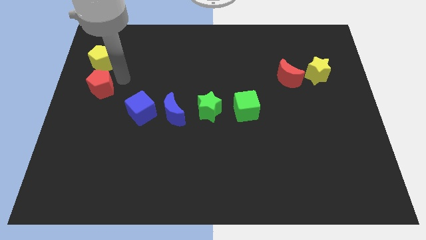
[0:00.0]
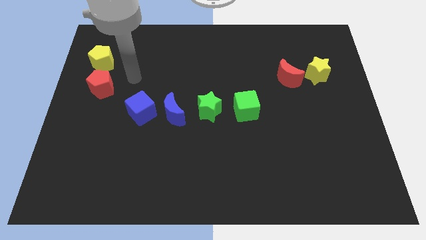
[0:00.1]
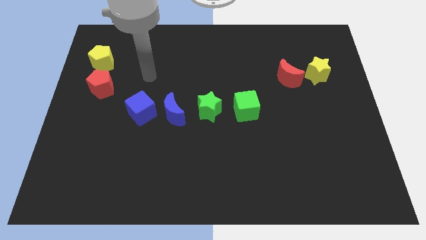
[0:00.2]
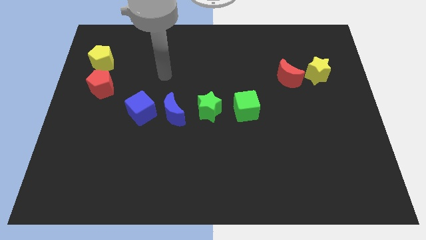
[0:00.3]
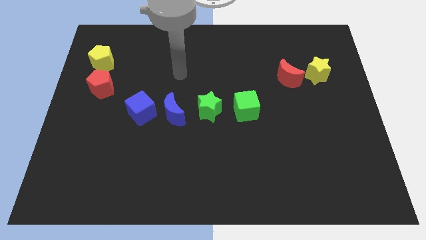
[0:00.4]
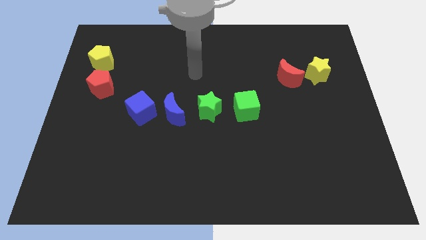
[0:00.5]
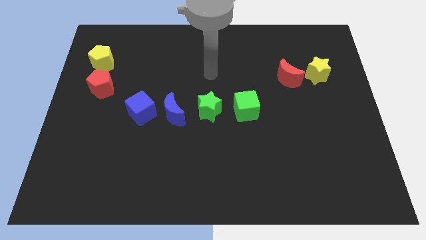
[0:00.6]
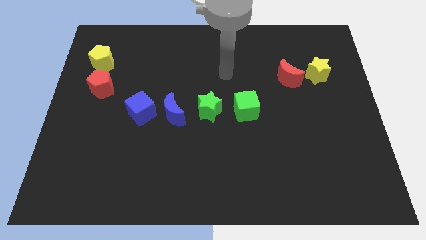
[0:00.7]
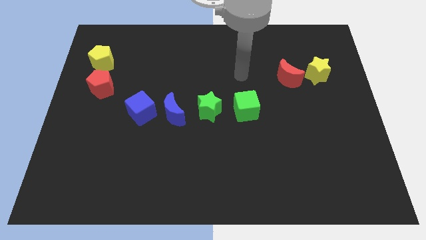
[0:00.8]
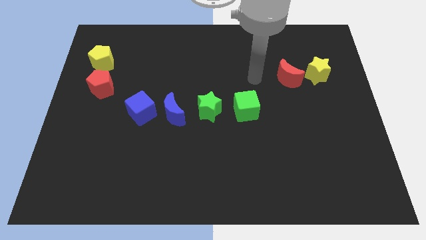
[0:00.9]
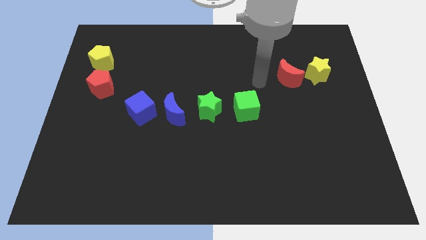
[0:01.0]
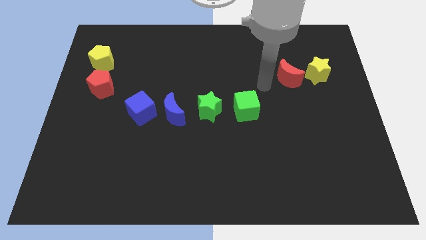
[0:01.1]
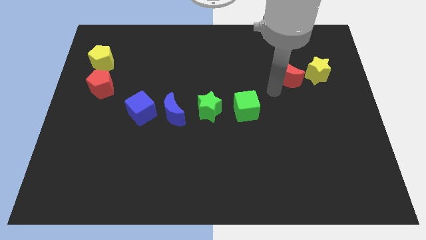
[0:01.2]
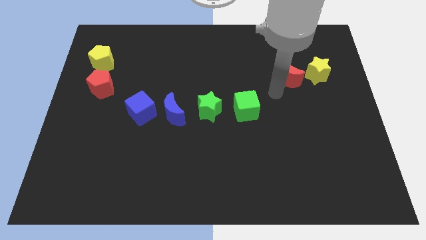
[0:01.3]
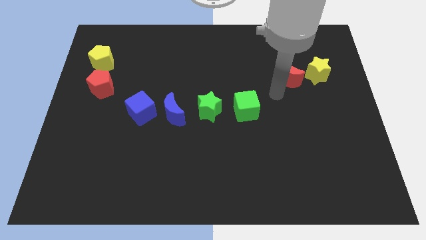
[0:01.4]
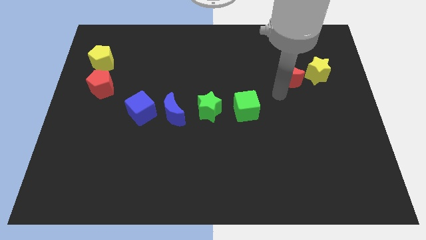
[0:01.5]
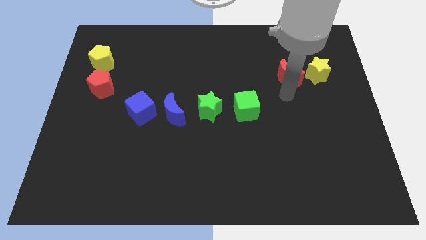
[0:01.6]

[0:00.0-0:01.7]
move your arm away from red pentagon

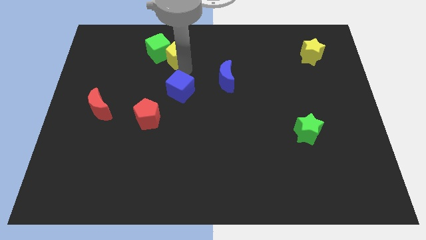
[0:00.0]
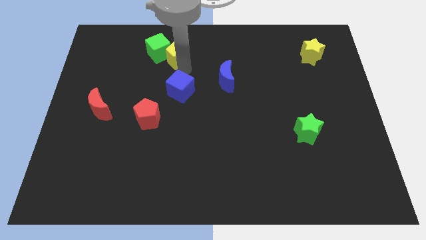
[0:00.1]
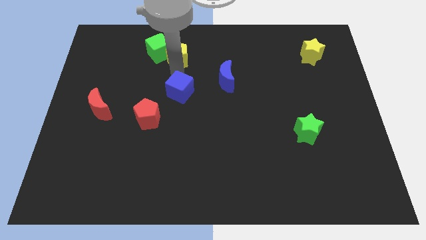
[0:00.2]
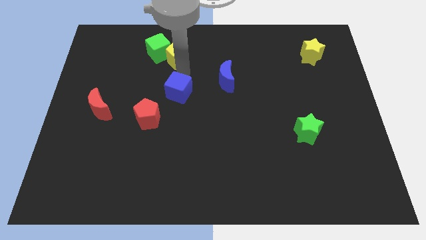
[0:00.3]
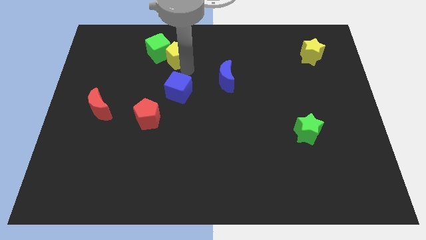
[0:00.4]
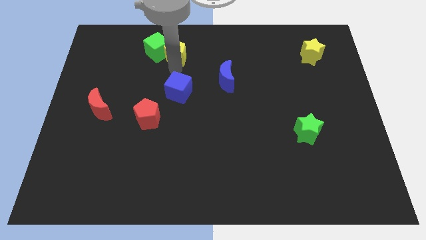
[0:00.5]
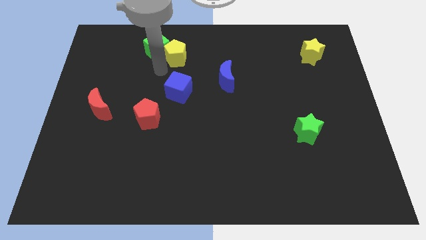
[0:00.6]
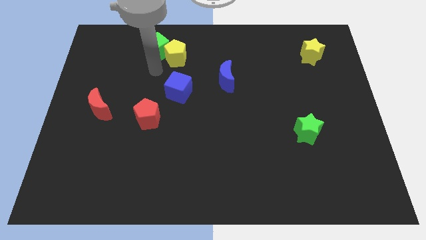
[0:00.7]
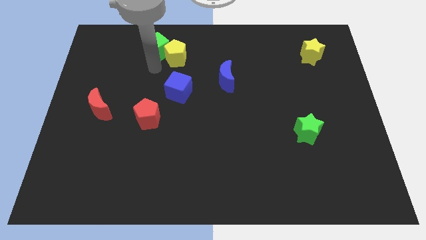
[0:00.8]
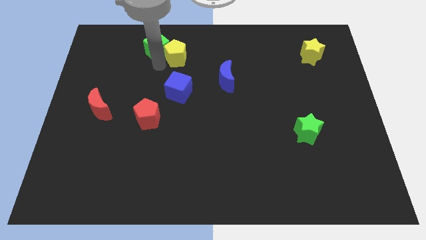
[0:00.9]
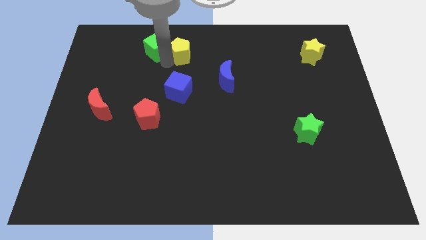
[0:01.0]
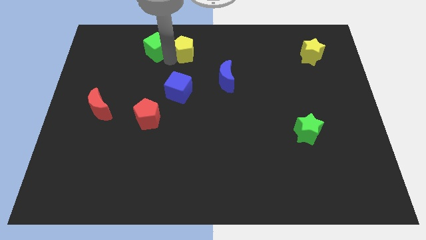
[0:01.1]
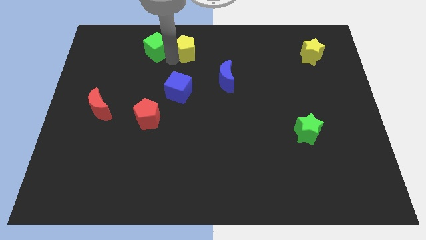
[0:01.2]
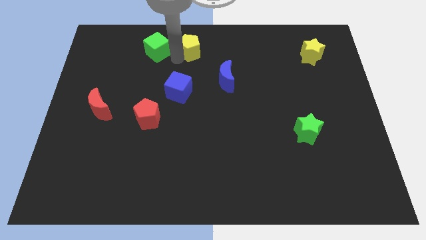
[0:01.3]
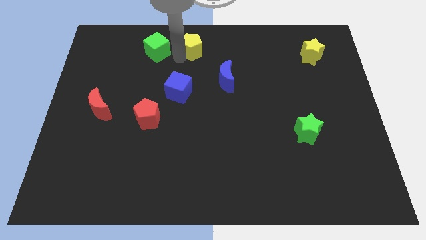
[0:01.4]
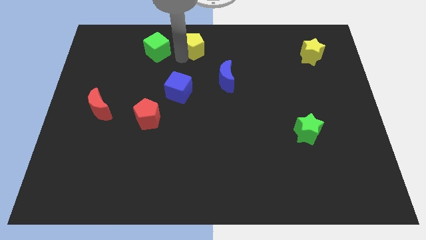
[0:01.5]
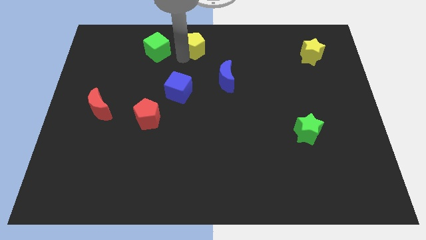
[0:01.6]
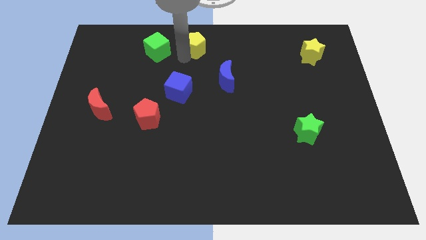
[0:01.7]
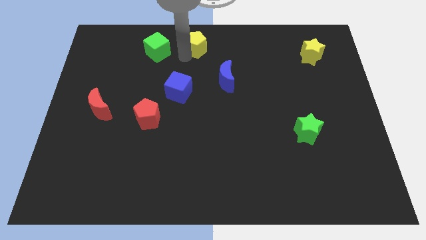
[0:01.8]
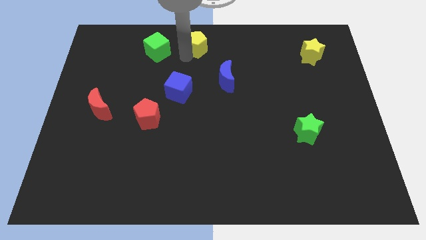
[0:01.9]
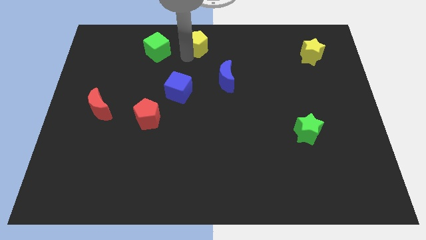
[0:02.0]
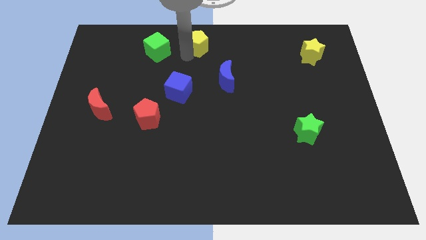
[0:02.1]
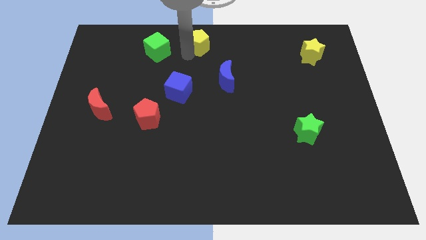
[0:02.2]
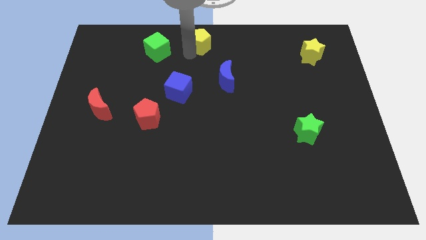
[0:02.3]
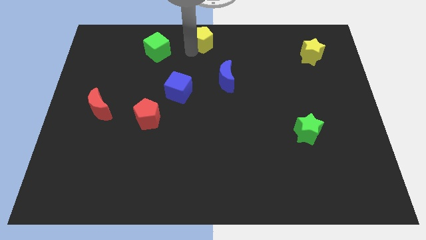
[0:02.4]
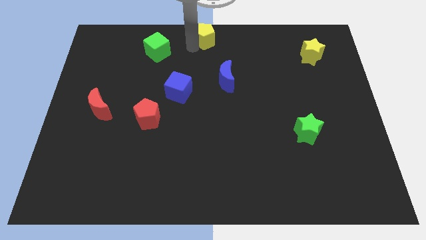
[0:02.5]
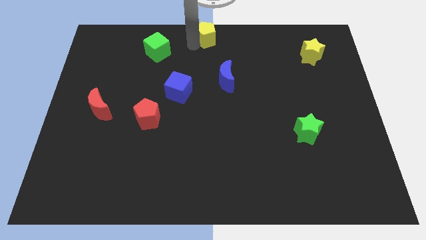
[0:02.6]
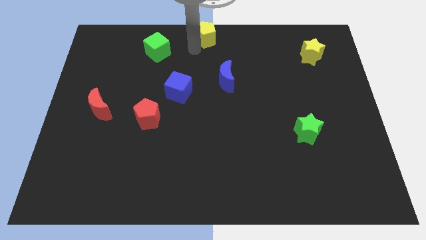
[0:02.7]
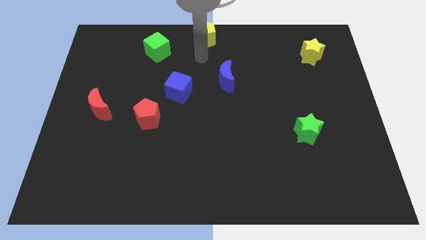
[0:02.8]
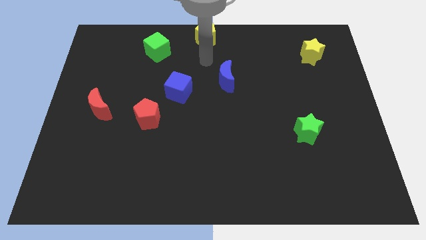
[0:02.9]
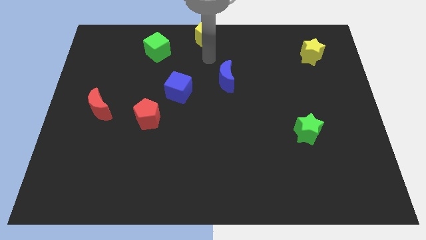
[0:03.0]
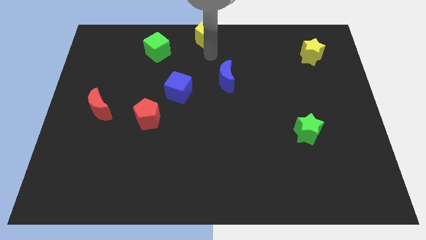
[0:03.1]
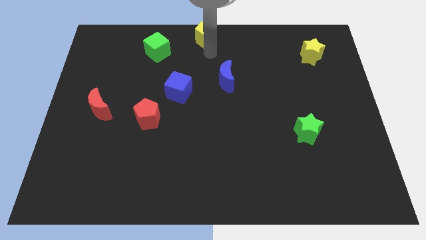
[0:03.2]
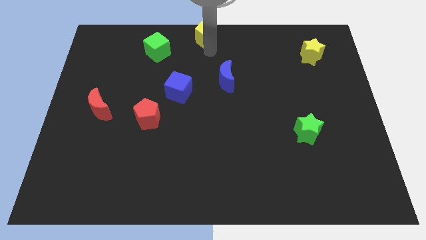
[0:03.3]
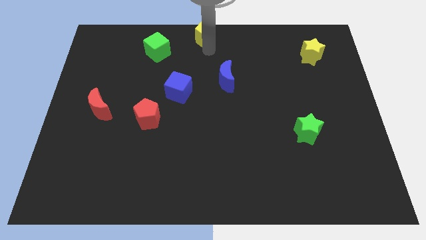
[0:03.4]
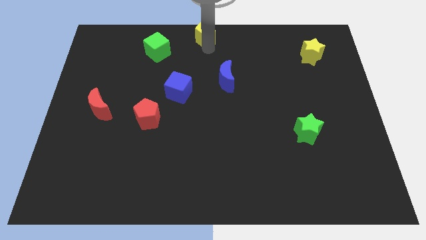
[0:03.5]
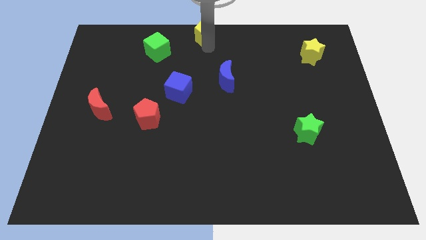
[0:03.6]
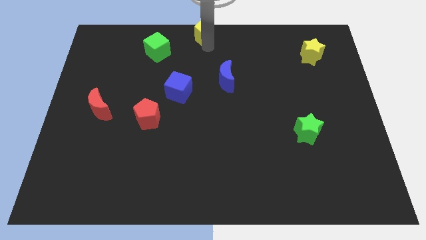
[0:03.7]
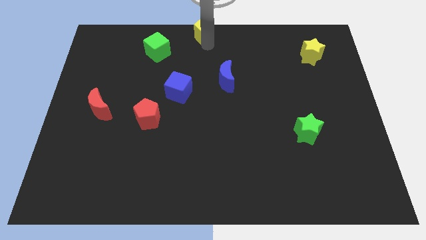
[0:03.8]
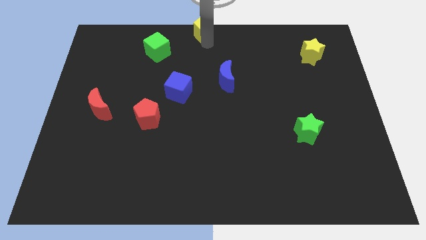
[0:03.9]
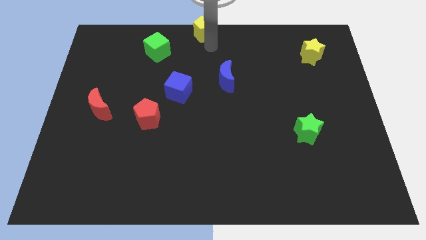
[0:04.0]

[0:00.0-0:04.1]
separate yellow pentagon from green cube

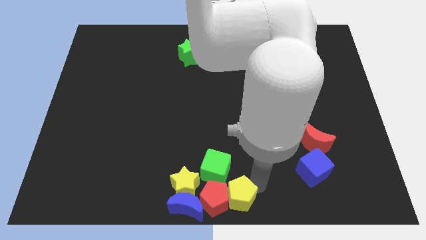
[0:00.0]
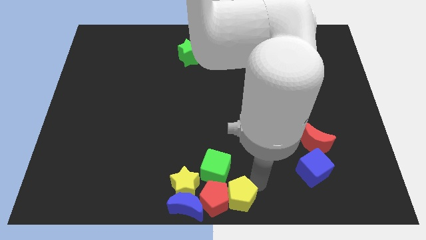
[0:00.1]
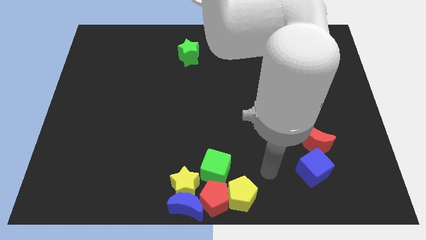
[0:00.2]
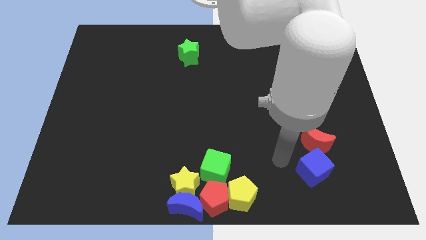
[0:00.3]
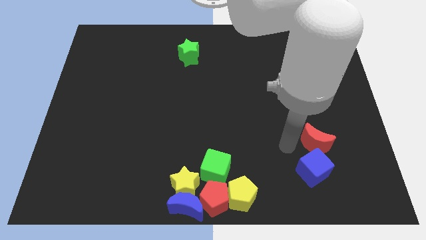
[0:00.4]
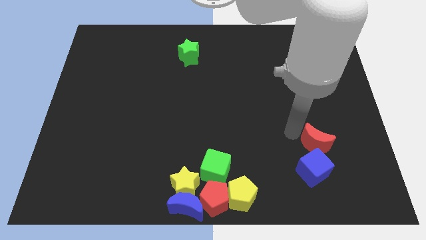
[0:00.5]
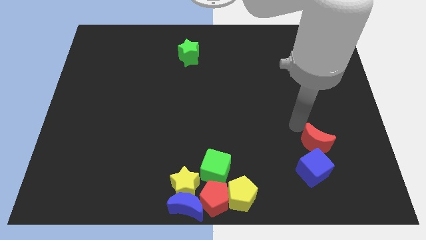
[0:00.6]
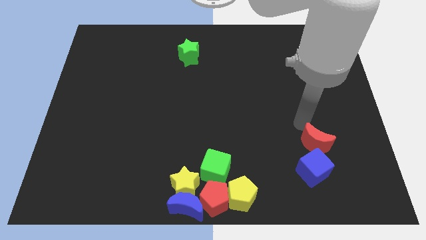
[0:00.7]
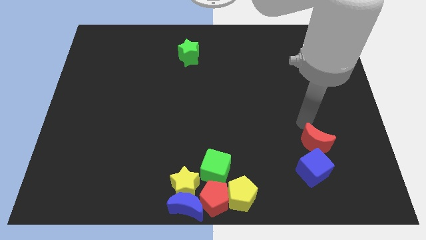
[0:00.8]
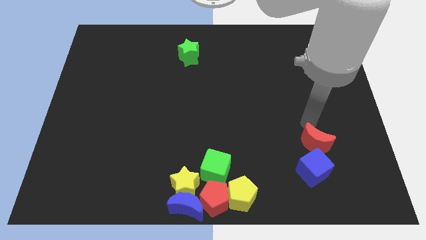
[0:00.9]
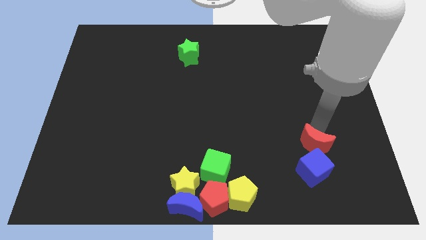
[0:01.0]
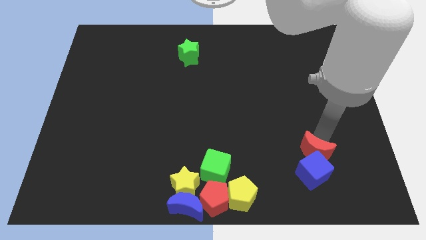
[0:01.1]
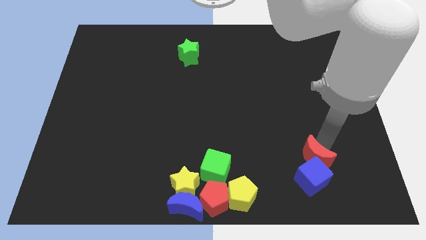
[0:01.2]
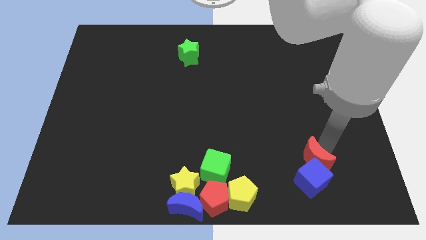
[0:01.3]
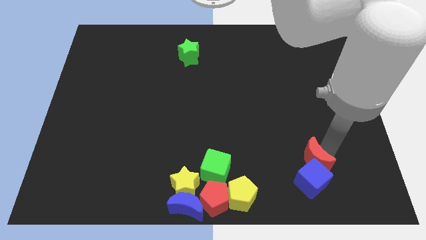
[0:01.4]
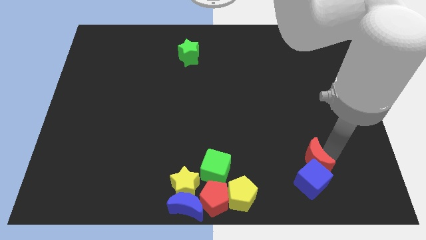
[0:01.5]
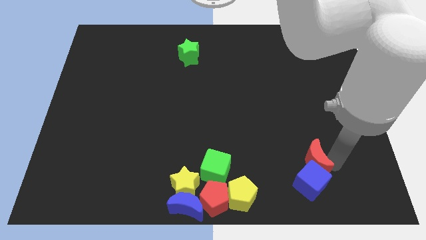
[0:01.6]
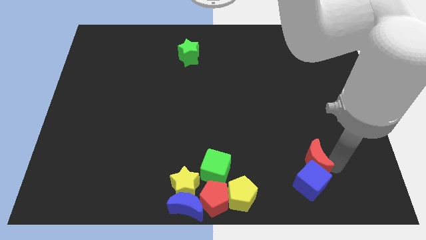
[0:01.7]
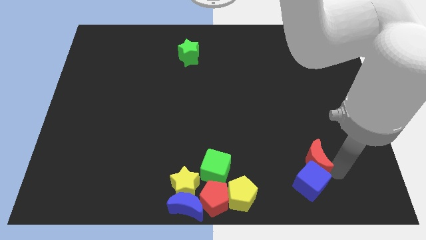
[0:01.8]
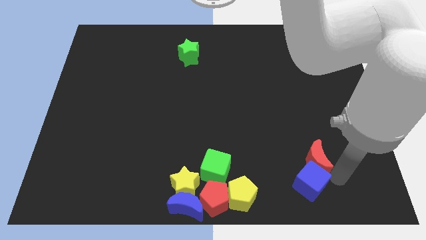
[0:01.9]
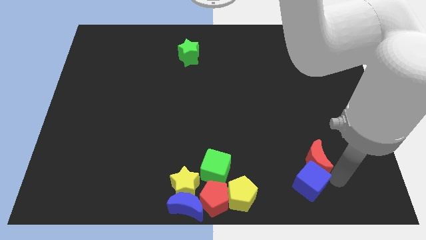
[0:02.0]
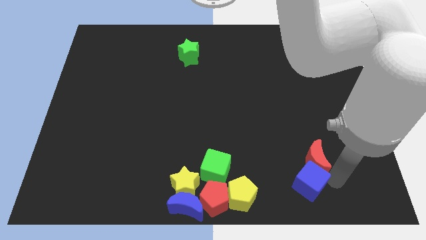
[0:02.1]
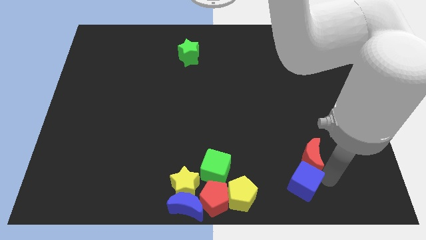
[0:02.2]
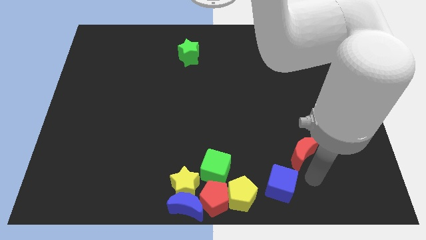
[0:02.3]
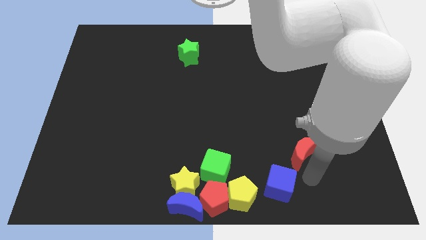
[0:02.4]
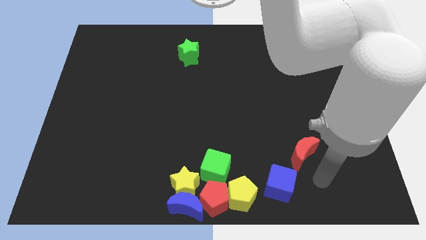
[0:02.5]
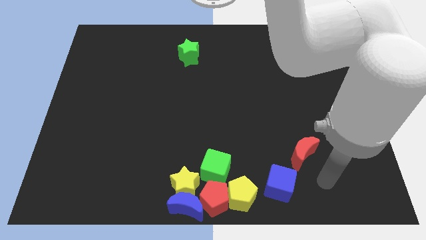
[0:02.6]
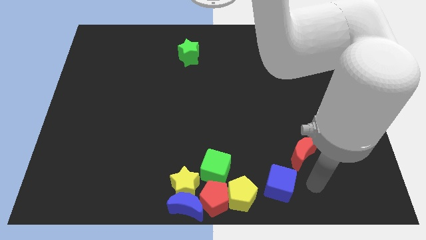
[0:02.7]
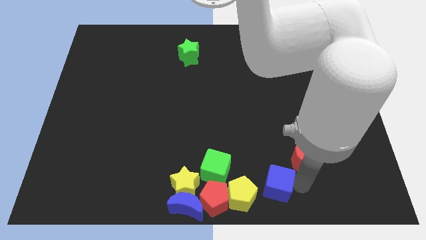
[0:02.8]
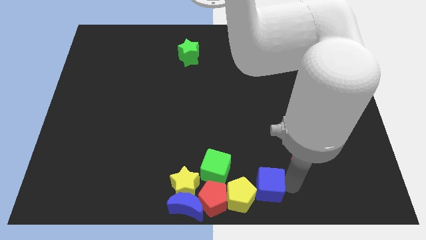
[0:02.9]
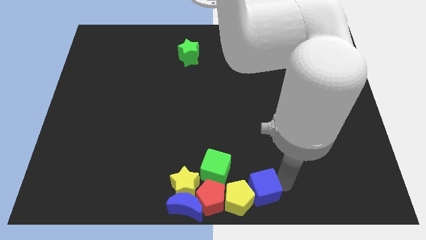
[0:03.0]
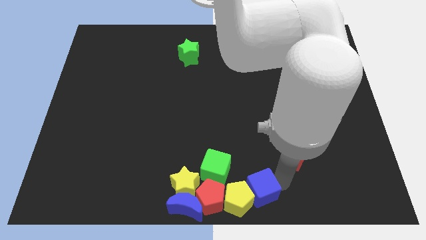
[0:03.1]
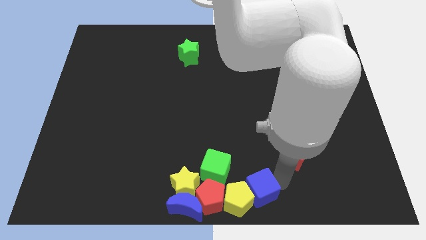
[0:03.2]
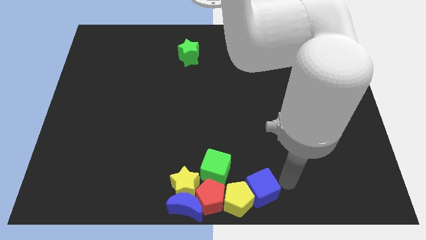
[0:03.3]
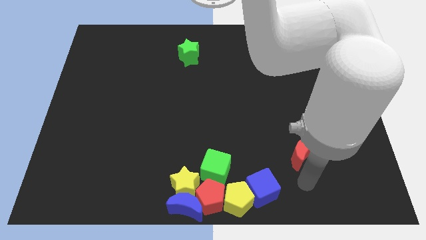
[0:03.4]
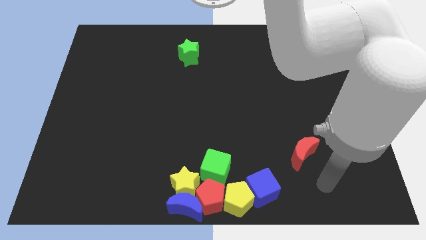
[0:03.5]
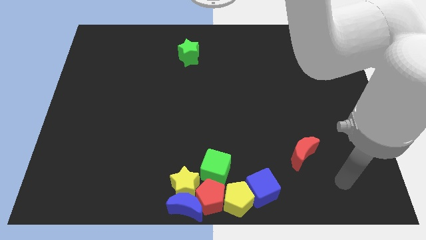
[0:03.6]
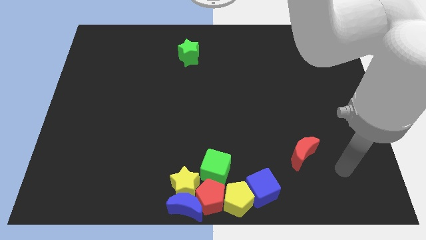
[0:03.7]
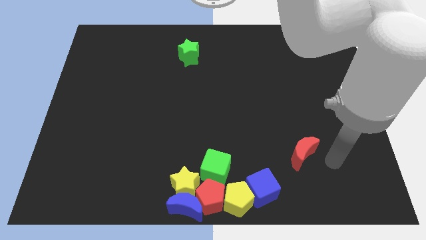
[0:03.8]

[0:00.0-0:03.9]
push the blue cube to the top right side of the yellow pentagon
